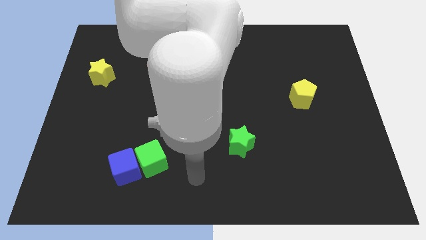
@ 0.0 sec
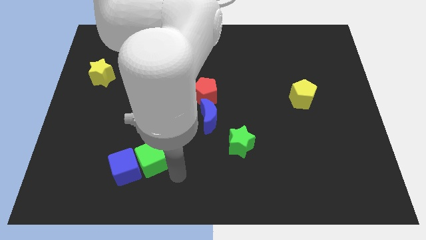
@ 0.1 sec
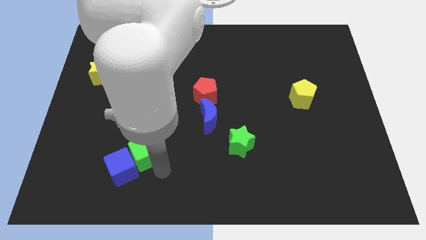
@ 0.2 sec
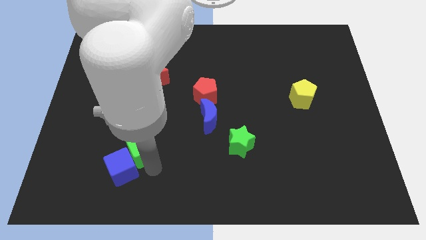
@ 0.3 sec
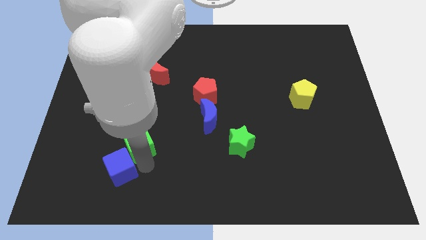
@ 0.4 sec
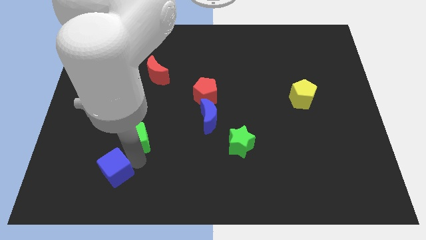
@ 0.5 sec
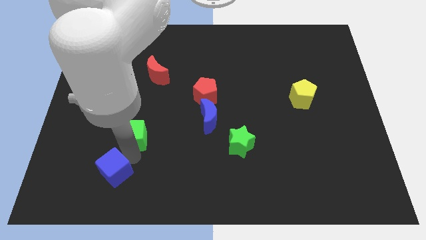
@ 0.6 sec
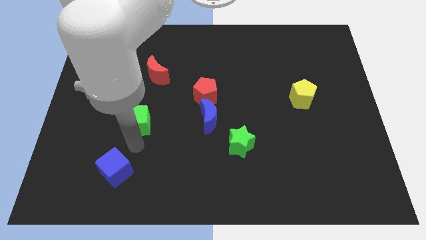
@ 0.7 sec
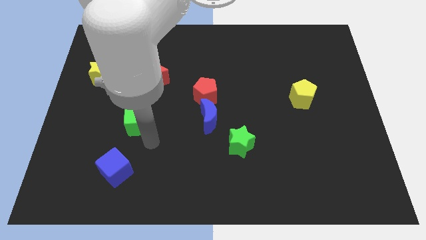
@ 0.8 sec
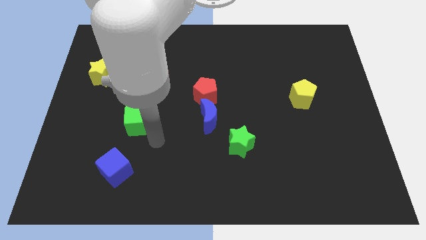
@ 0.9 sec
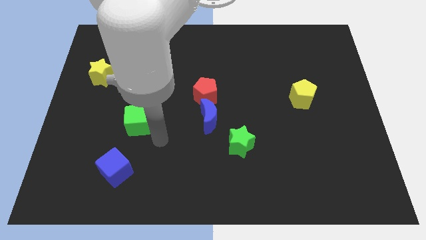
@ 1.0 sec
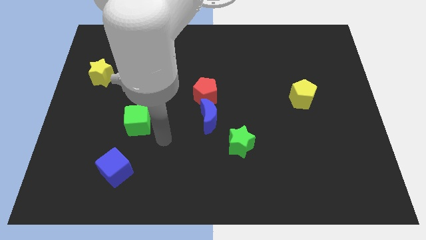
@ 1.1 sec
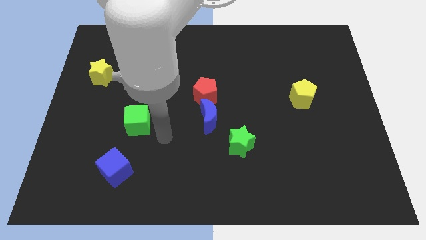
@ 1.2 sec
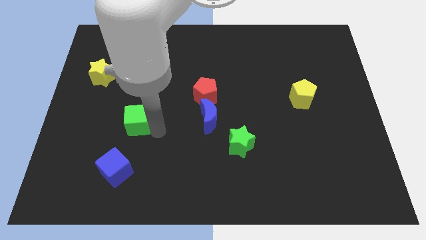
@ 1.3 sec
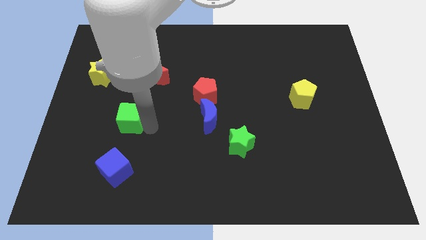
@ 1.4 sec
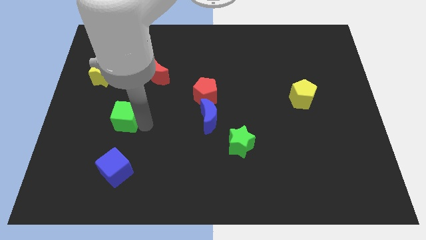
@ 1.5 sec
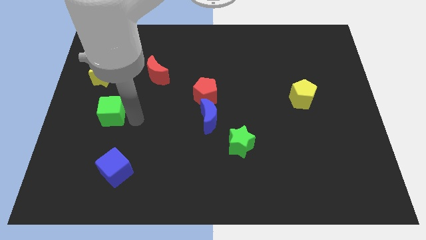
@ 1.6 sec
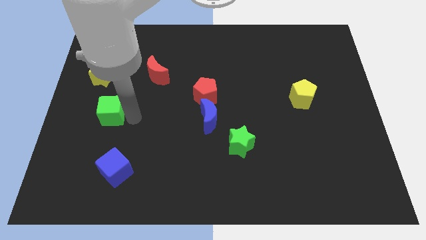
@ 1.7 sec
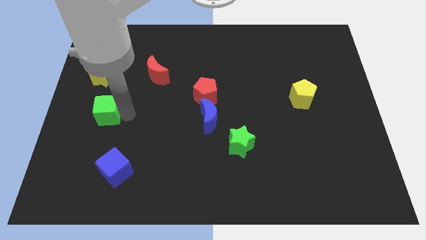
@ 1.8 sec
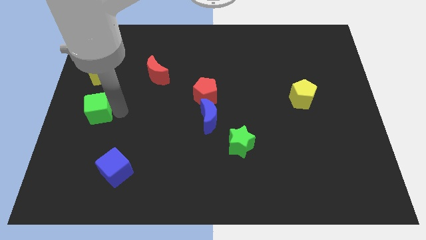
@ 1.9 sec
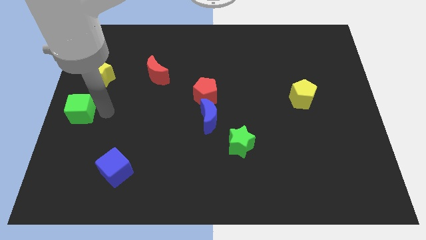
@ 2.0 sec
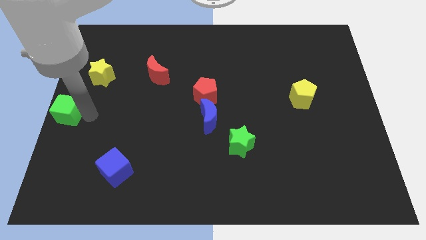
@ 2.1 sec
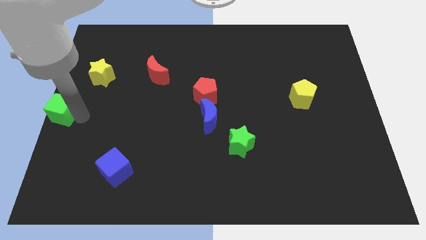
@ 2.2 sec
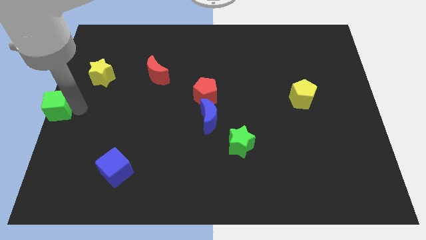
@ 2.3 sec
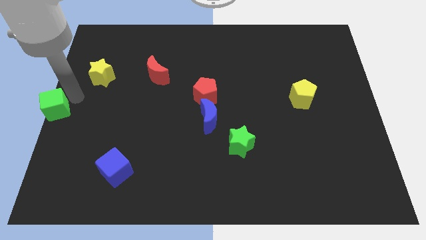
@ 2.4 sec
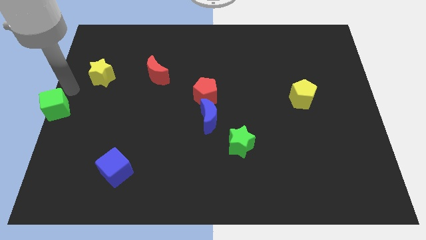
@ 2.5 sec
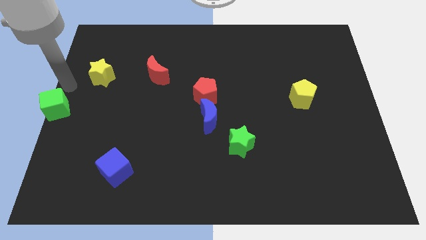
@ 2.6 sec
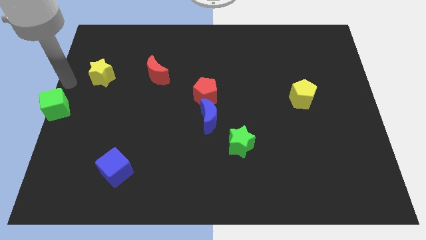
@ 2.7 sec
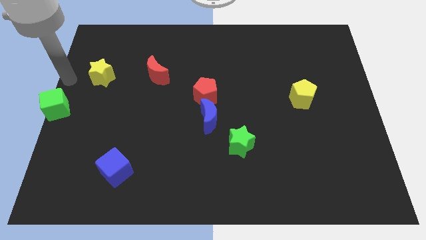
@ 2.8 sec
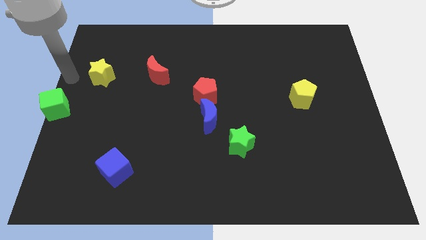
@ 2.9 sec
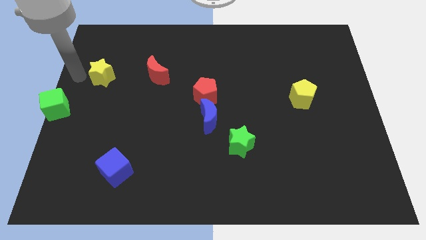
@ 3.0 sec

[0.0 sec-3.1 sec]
move the green cube to center left

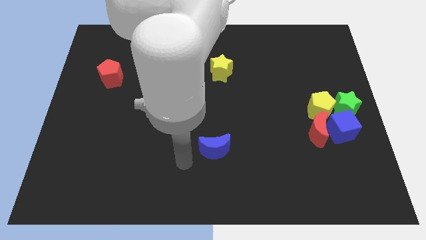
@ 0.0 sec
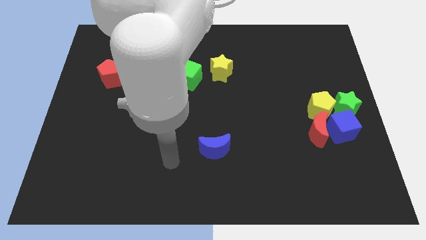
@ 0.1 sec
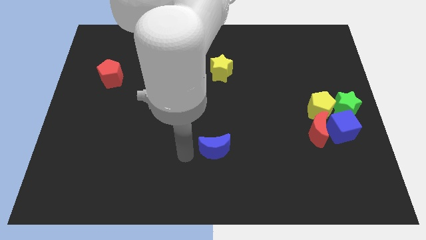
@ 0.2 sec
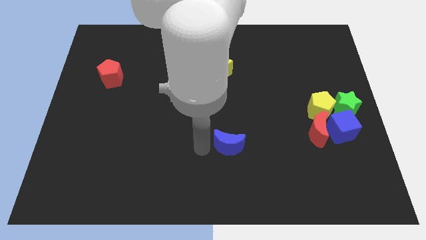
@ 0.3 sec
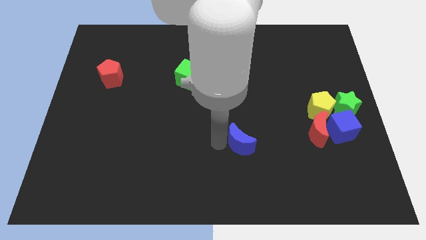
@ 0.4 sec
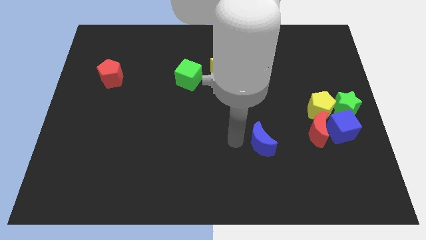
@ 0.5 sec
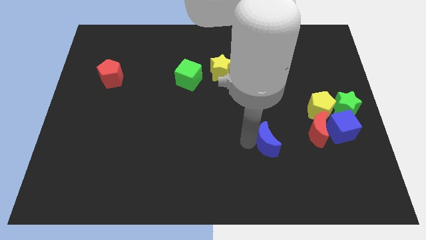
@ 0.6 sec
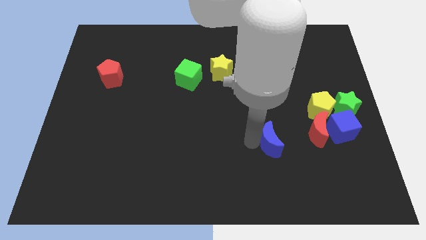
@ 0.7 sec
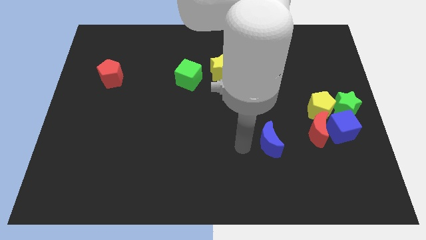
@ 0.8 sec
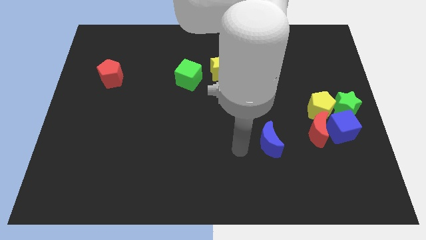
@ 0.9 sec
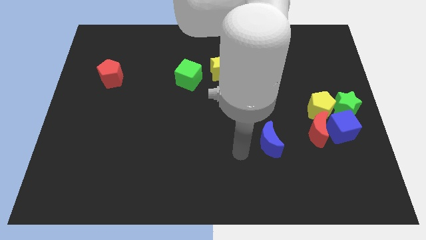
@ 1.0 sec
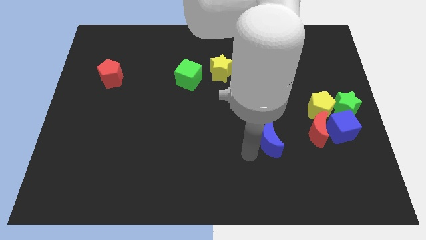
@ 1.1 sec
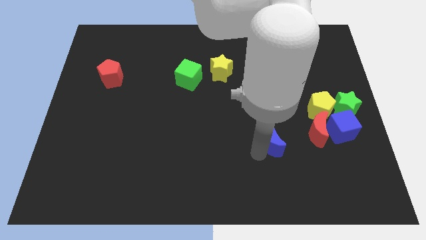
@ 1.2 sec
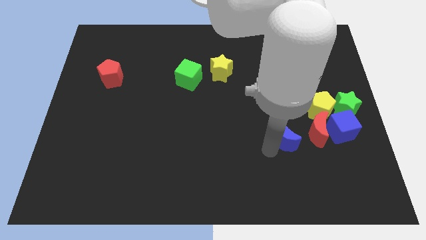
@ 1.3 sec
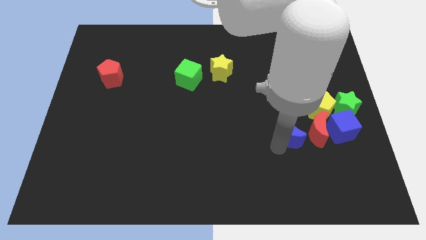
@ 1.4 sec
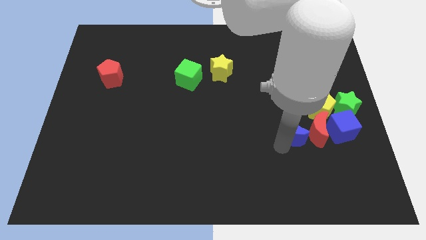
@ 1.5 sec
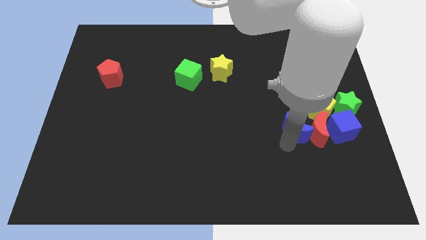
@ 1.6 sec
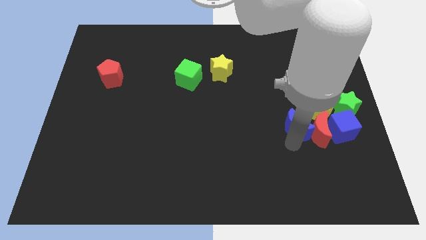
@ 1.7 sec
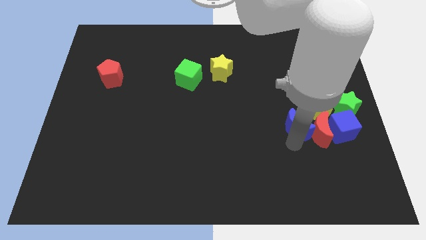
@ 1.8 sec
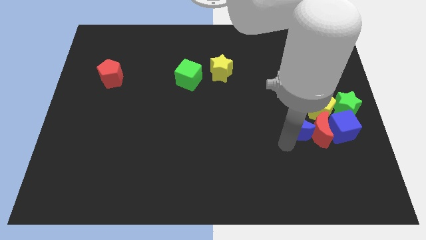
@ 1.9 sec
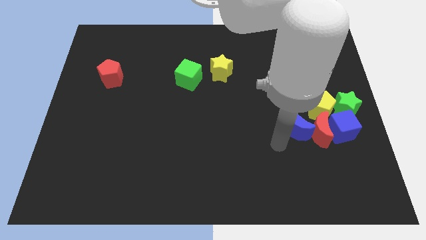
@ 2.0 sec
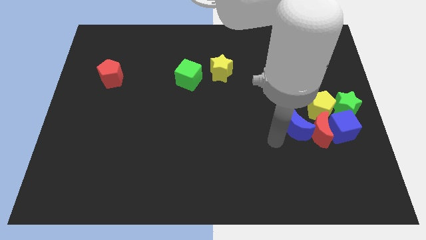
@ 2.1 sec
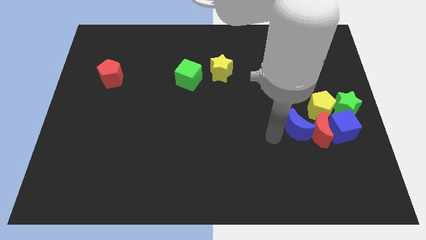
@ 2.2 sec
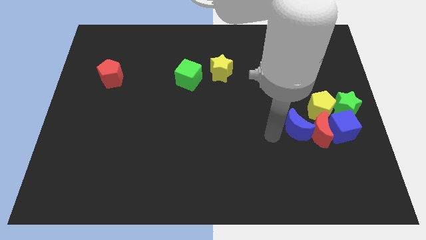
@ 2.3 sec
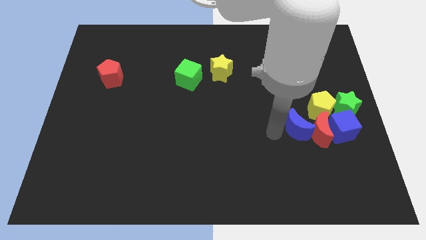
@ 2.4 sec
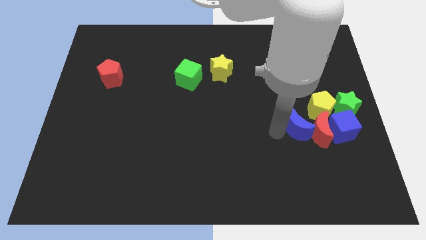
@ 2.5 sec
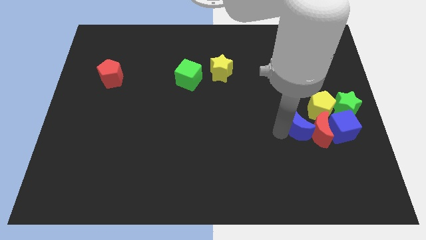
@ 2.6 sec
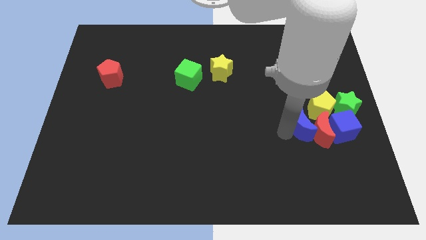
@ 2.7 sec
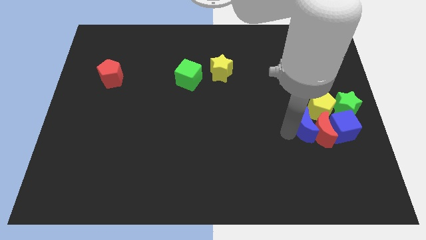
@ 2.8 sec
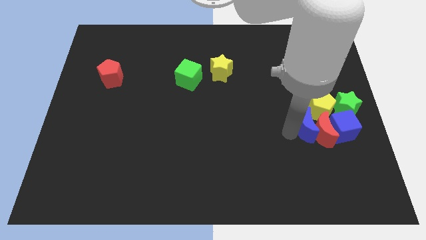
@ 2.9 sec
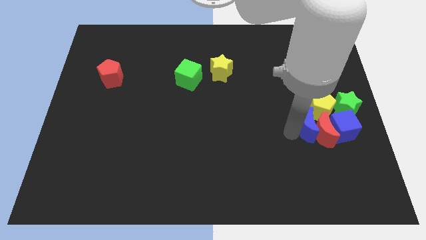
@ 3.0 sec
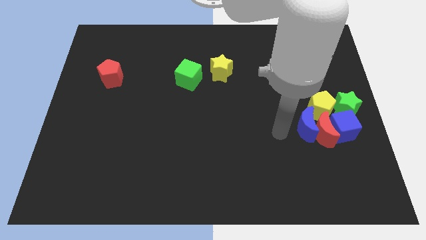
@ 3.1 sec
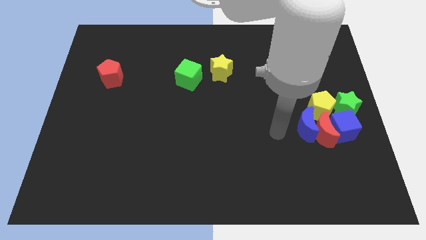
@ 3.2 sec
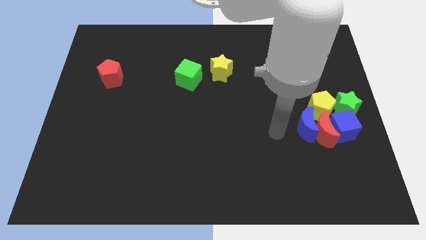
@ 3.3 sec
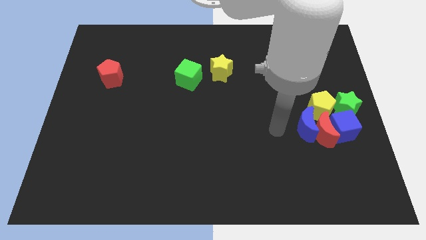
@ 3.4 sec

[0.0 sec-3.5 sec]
slide the blue crescent into the left side of the group of blocks

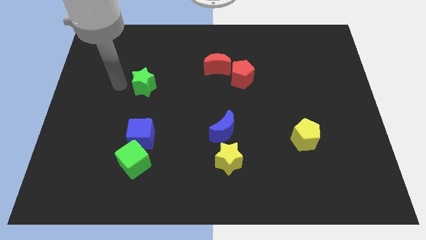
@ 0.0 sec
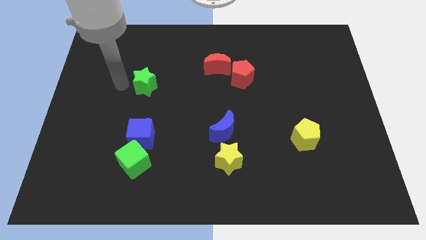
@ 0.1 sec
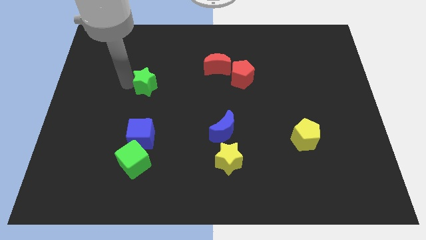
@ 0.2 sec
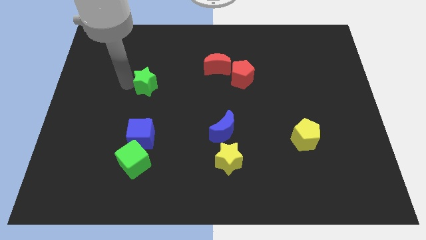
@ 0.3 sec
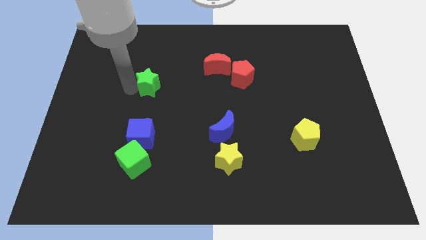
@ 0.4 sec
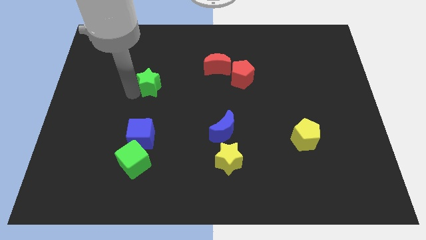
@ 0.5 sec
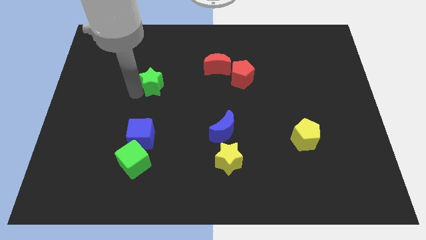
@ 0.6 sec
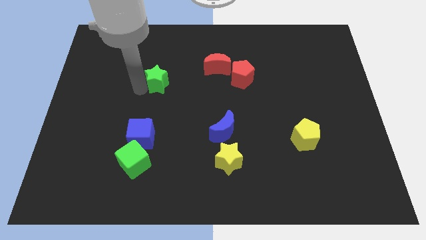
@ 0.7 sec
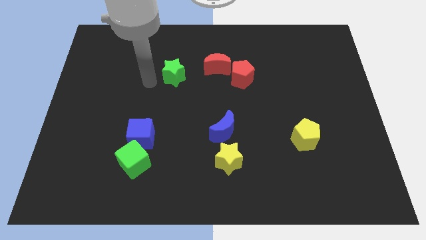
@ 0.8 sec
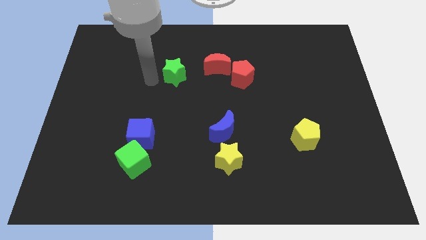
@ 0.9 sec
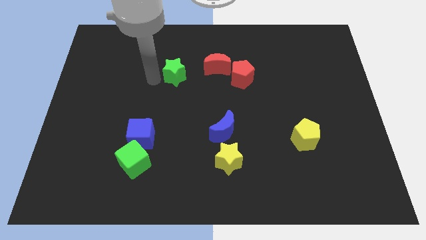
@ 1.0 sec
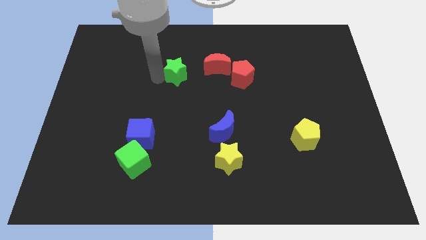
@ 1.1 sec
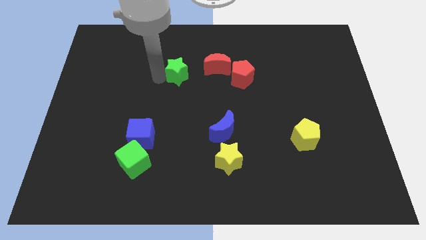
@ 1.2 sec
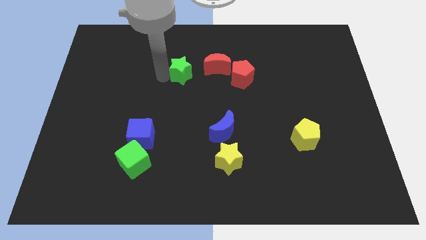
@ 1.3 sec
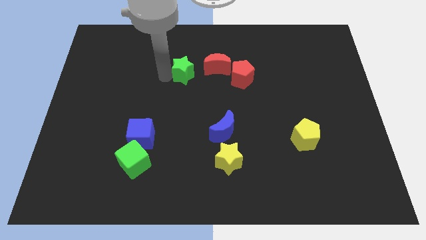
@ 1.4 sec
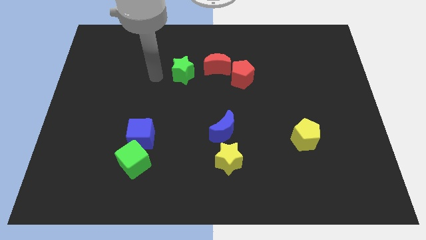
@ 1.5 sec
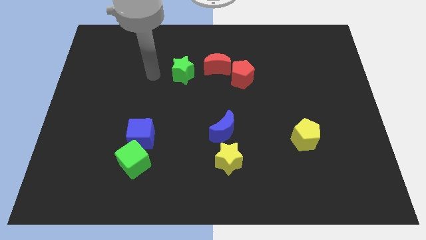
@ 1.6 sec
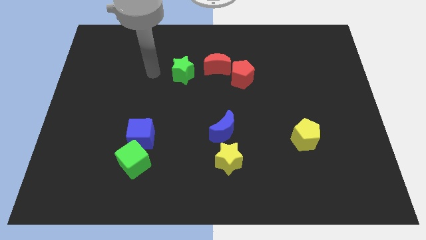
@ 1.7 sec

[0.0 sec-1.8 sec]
place green star to the left of red moon

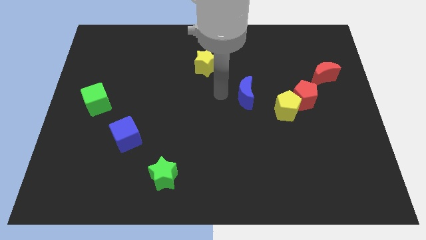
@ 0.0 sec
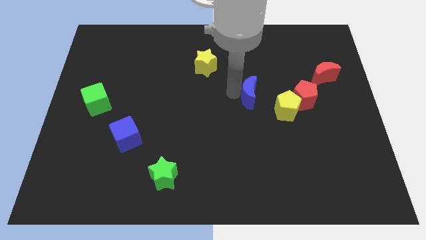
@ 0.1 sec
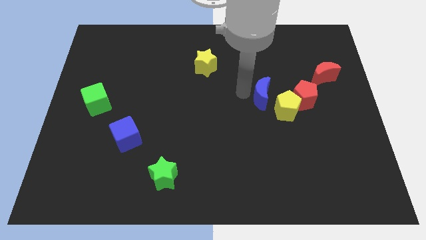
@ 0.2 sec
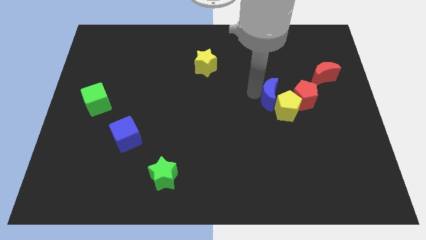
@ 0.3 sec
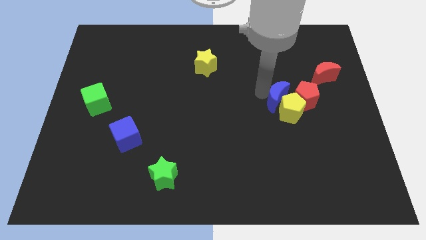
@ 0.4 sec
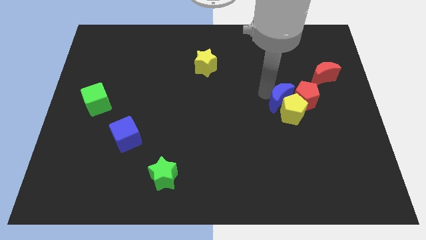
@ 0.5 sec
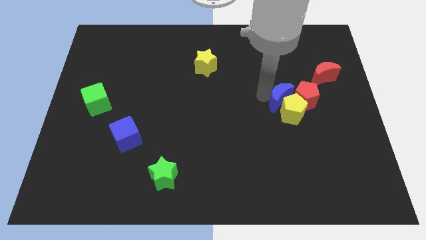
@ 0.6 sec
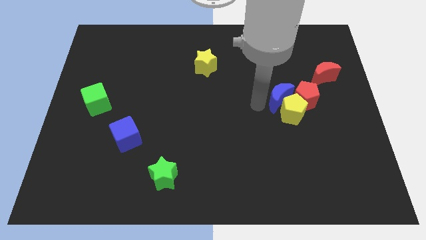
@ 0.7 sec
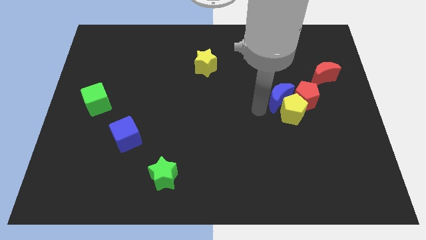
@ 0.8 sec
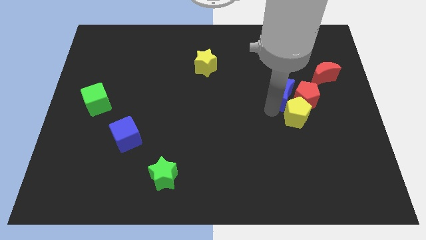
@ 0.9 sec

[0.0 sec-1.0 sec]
move blue moon into the yellow pentagon
